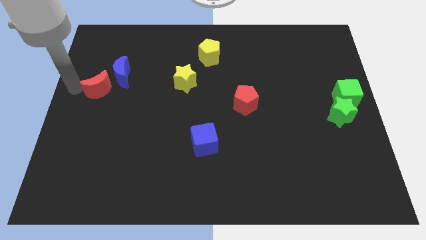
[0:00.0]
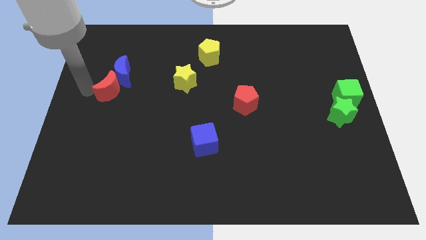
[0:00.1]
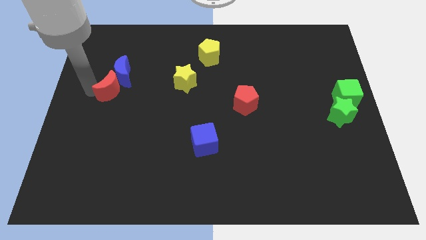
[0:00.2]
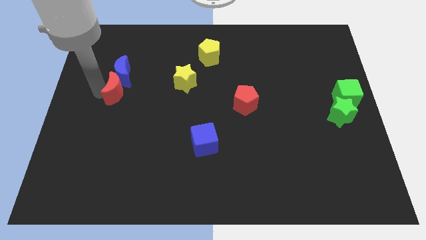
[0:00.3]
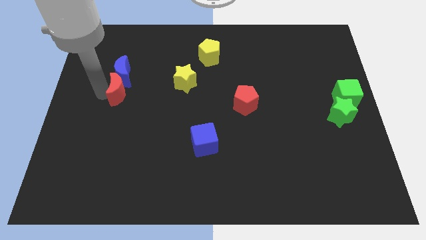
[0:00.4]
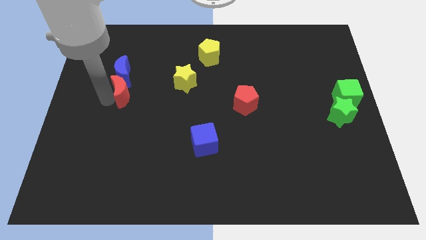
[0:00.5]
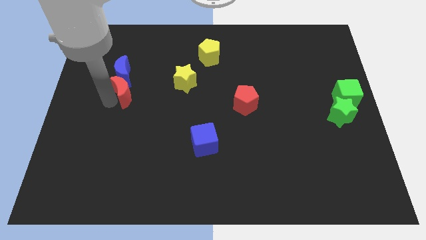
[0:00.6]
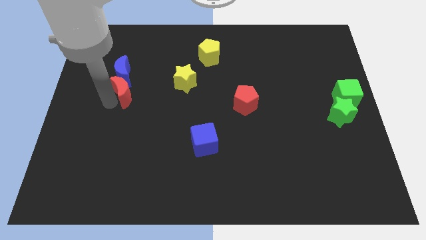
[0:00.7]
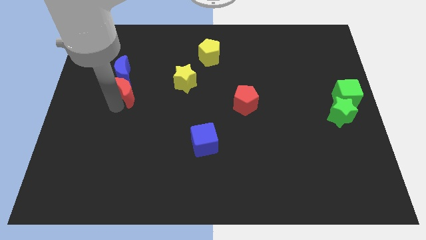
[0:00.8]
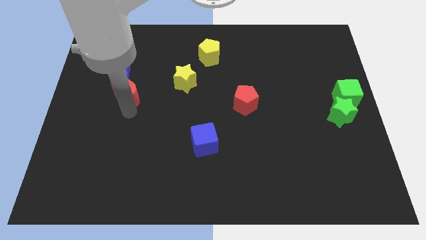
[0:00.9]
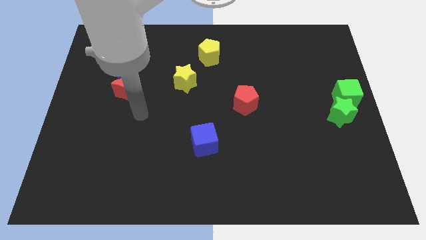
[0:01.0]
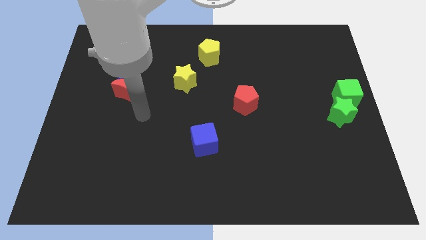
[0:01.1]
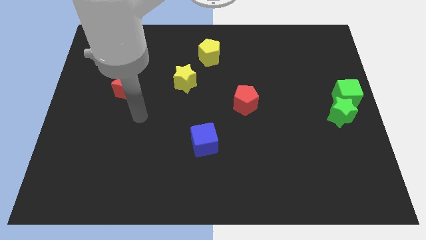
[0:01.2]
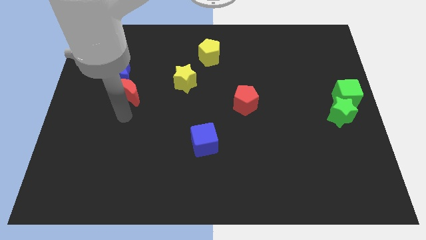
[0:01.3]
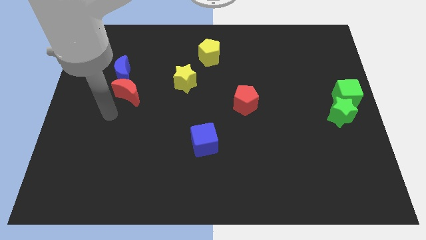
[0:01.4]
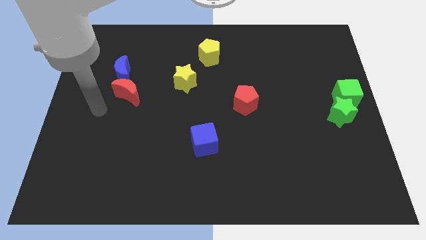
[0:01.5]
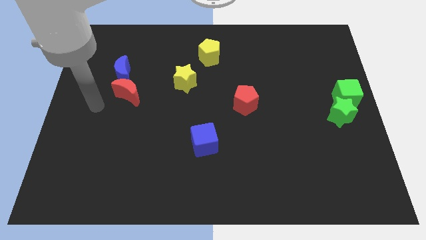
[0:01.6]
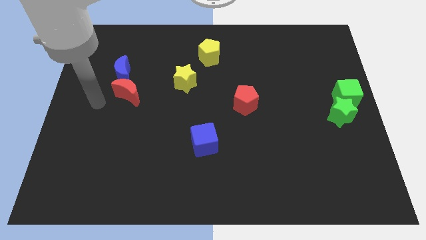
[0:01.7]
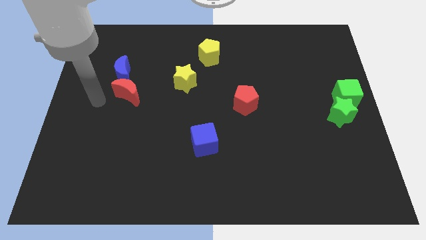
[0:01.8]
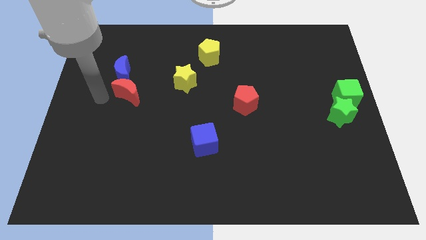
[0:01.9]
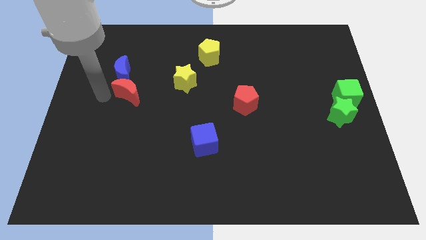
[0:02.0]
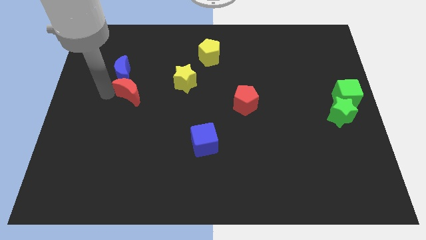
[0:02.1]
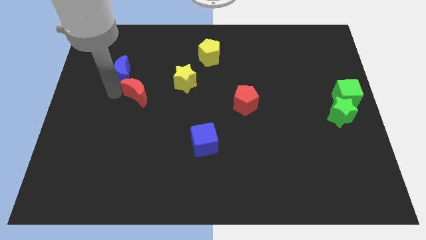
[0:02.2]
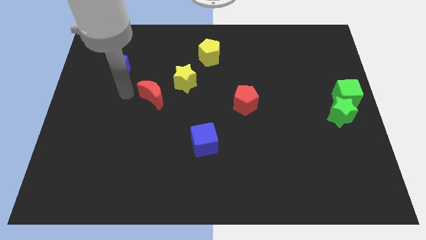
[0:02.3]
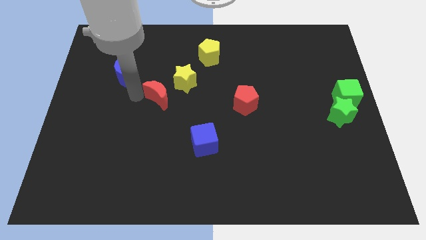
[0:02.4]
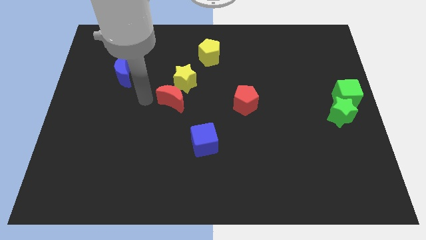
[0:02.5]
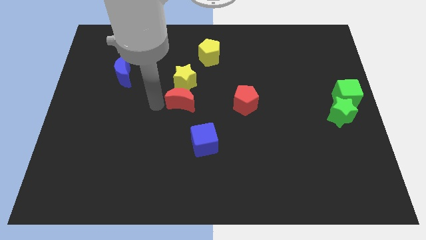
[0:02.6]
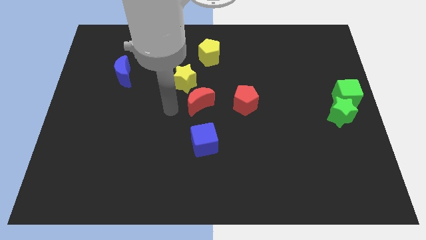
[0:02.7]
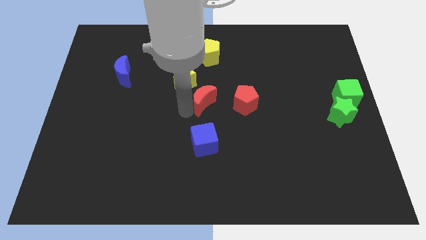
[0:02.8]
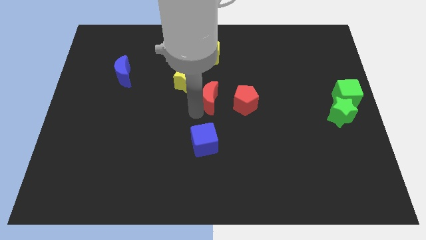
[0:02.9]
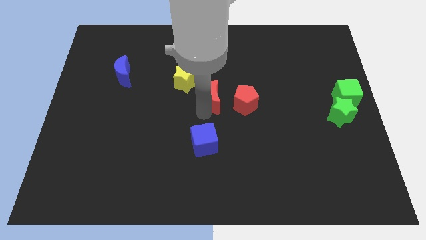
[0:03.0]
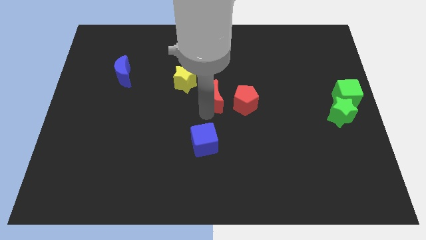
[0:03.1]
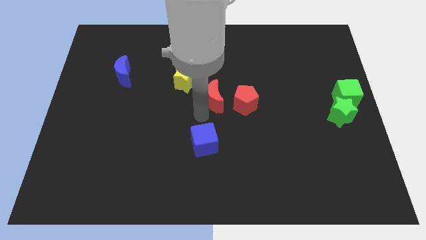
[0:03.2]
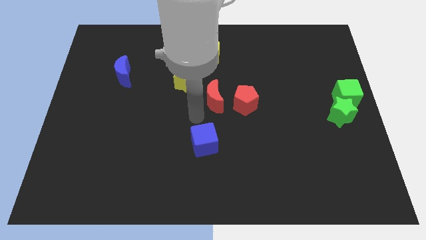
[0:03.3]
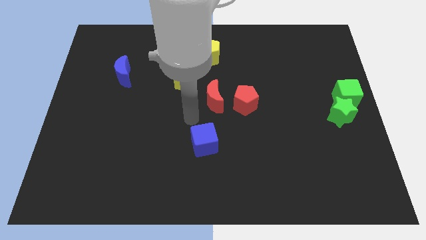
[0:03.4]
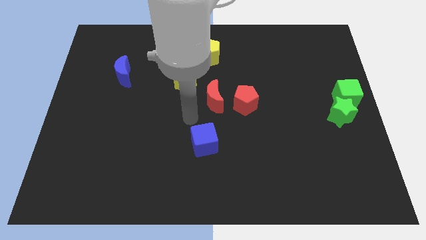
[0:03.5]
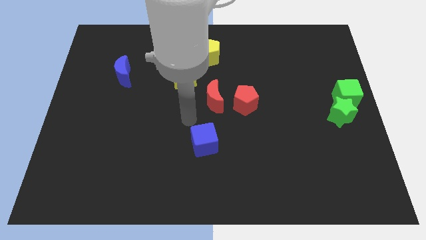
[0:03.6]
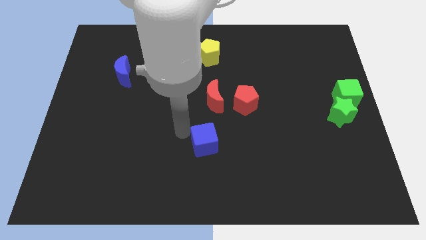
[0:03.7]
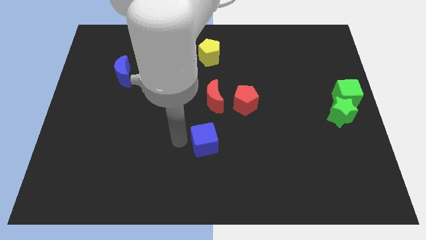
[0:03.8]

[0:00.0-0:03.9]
move the red crescent to the left of the red pentagon

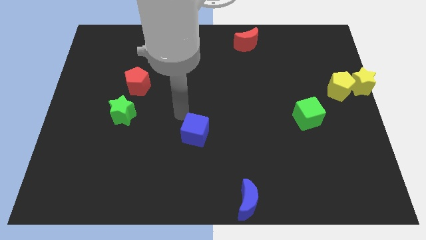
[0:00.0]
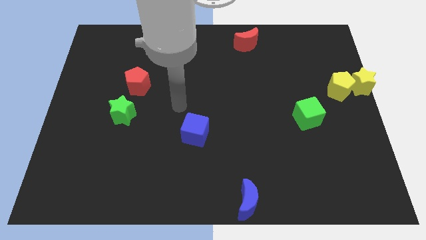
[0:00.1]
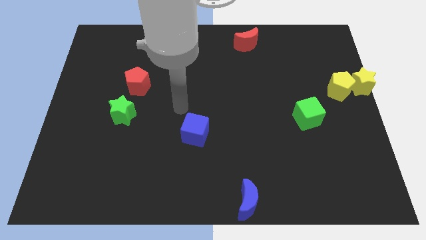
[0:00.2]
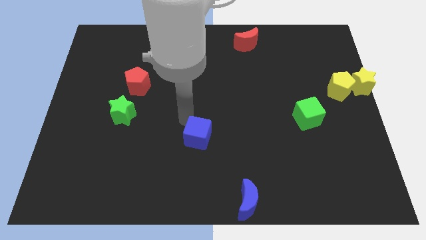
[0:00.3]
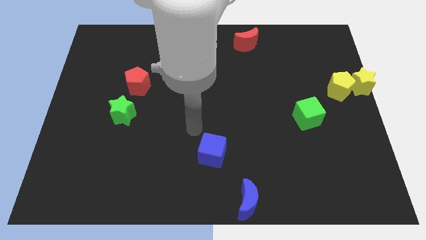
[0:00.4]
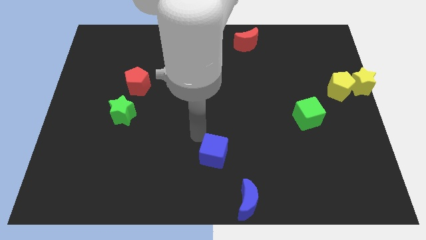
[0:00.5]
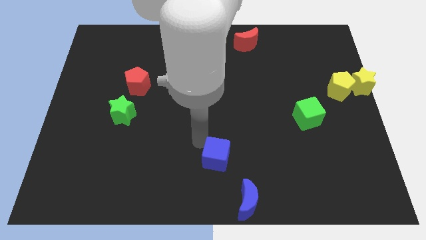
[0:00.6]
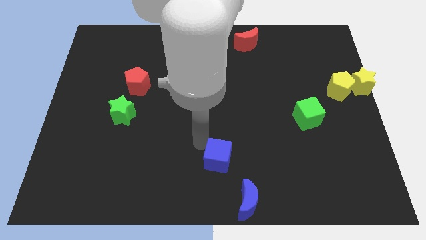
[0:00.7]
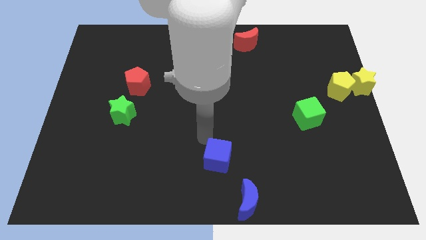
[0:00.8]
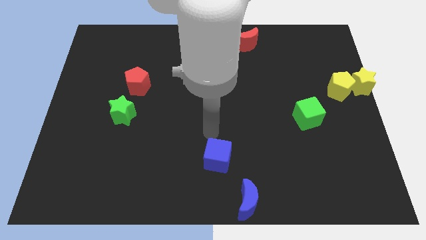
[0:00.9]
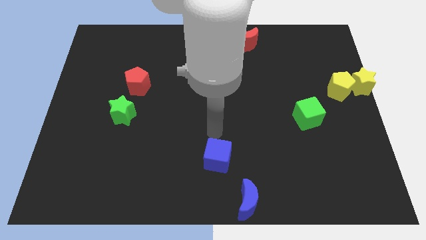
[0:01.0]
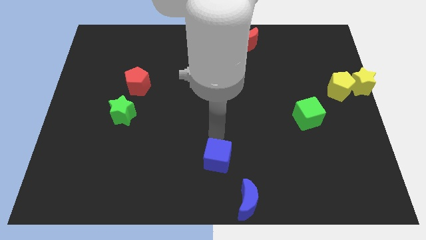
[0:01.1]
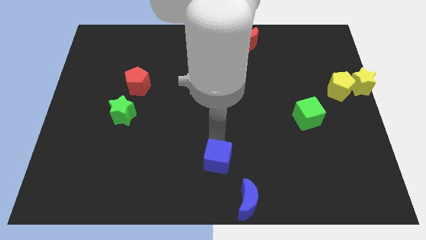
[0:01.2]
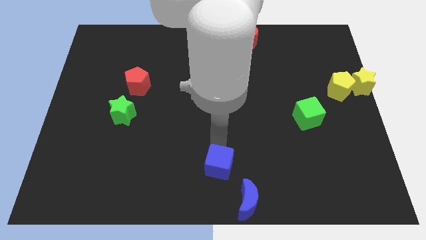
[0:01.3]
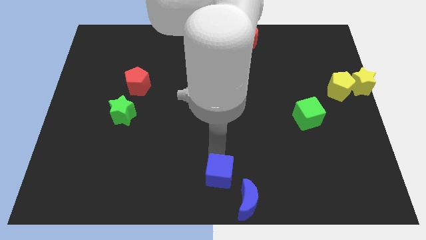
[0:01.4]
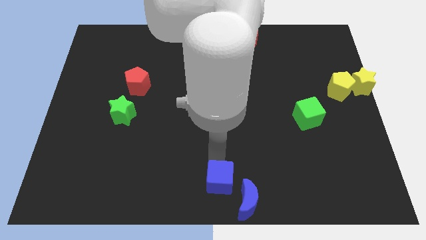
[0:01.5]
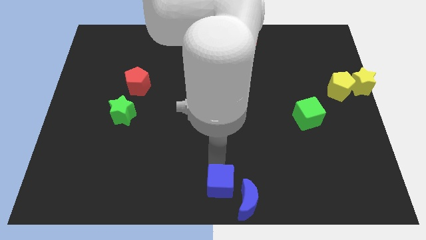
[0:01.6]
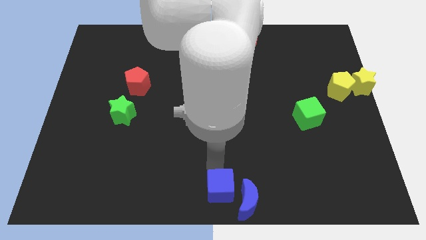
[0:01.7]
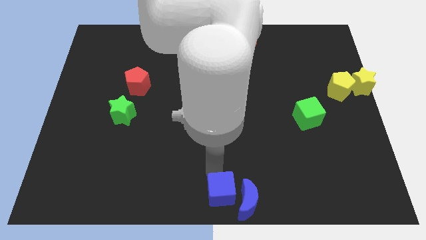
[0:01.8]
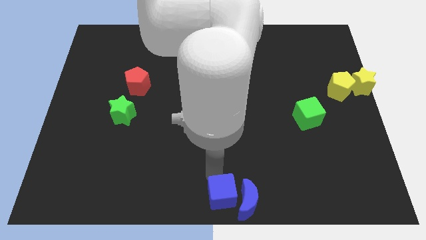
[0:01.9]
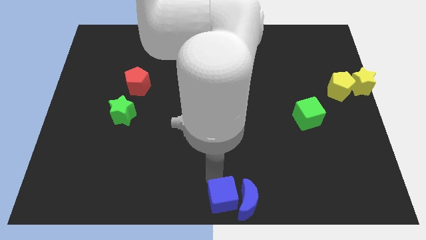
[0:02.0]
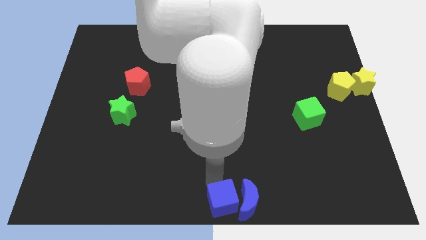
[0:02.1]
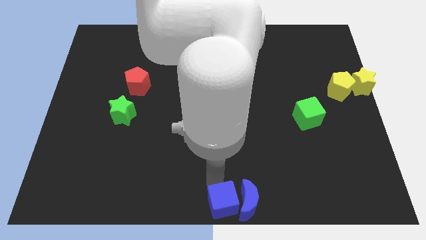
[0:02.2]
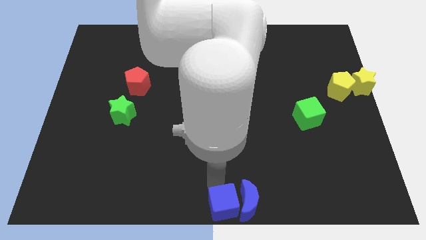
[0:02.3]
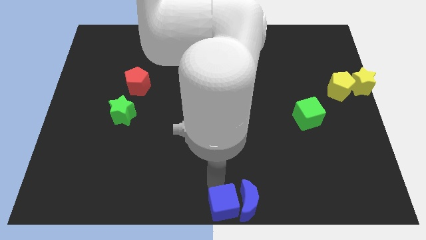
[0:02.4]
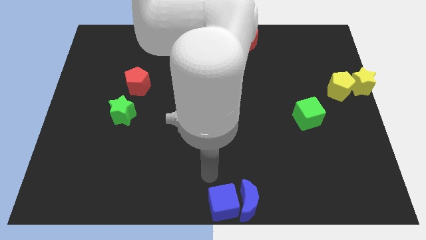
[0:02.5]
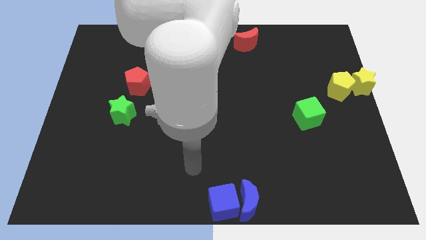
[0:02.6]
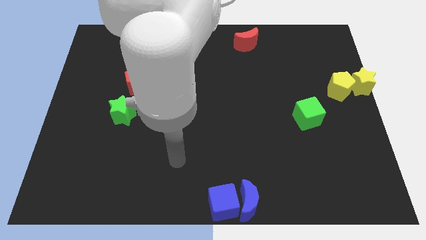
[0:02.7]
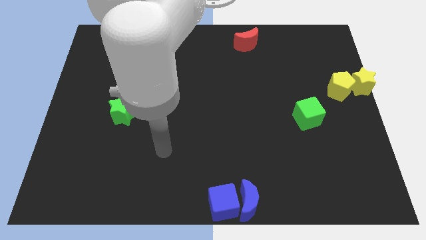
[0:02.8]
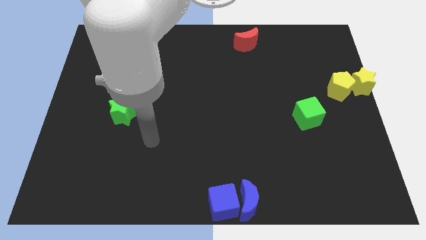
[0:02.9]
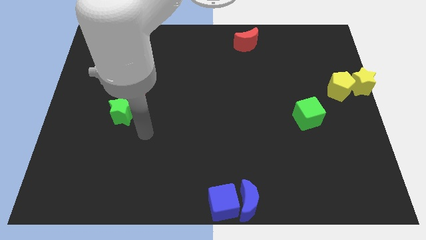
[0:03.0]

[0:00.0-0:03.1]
place the blue cube to the left of the blue crescent

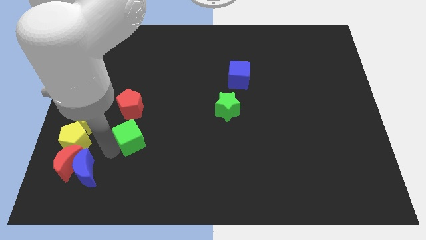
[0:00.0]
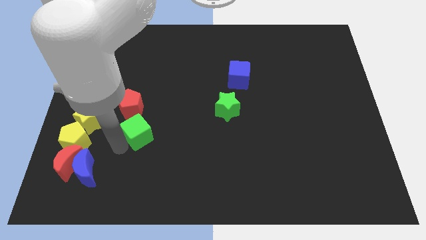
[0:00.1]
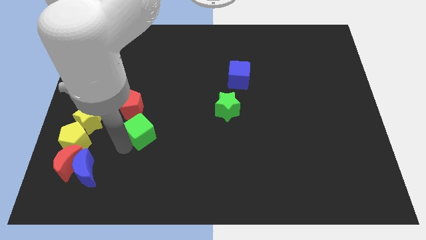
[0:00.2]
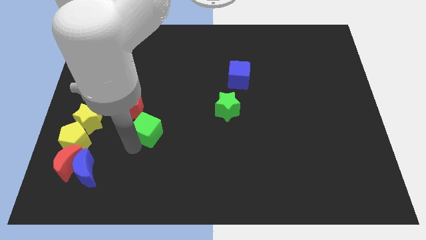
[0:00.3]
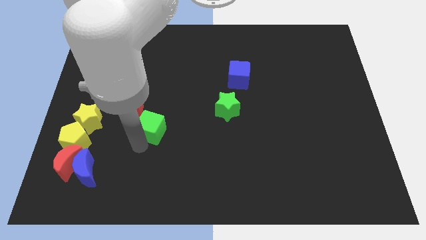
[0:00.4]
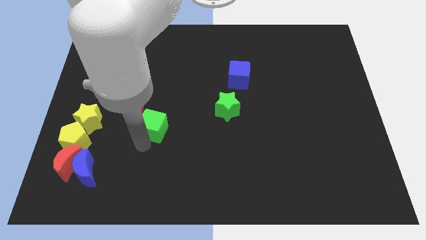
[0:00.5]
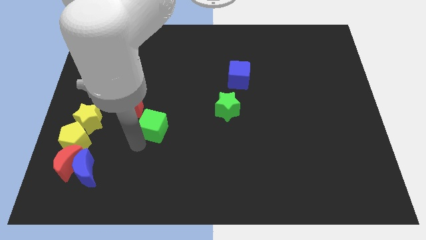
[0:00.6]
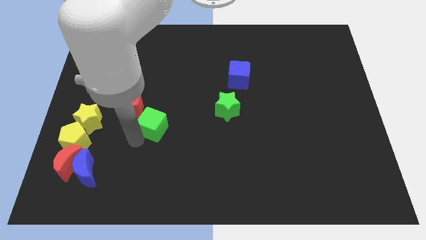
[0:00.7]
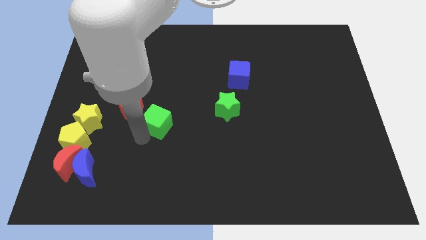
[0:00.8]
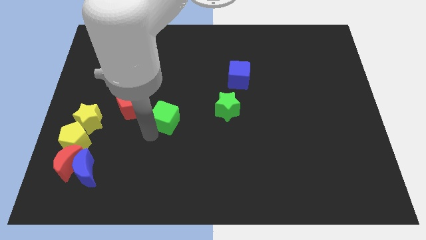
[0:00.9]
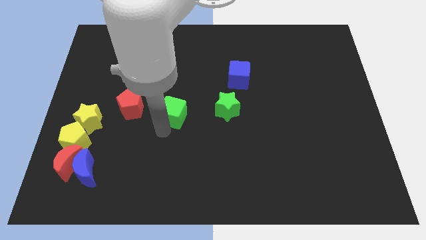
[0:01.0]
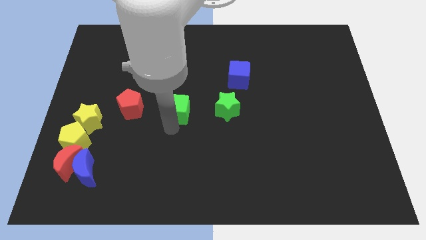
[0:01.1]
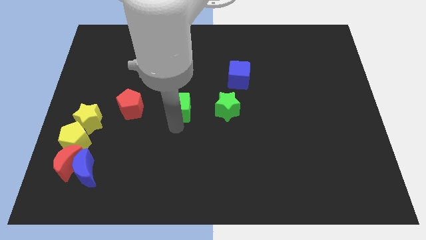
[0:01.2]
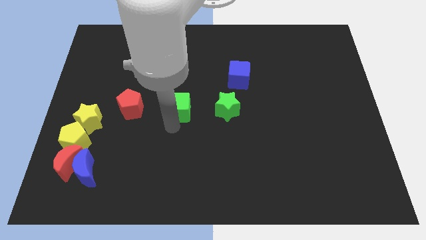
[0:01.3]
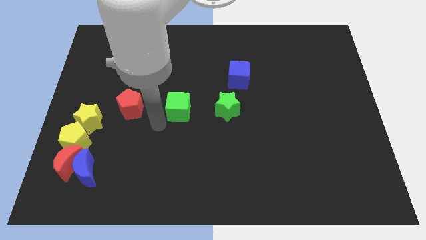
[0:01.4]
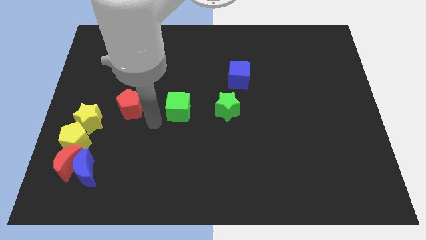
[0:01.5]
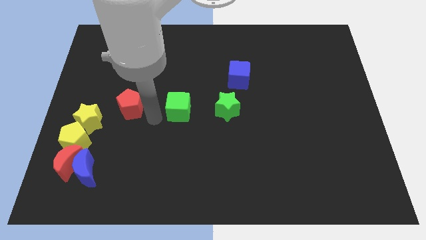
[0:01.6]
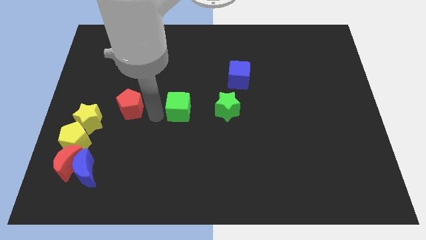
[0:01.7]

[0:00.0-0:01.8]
place the green cube in between the red pentagon and green star to form a horizontal line

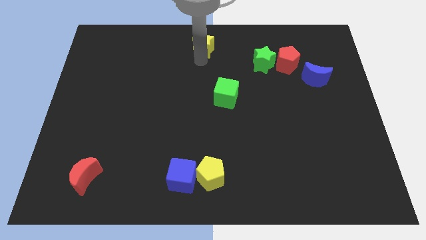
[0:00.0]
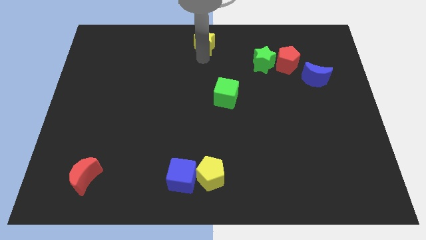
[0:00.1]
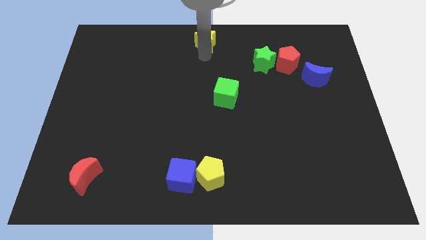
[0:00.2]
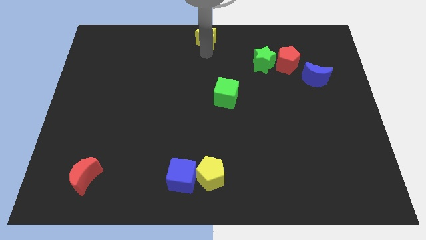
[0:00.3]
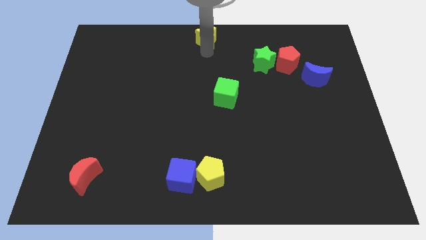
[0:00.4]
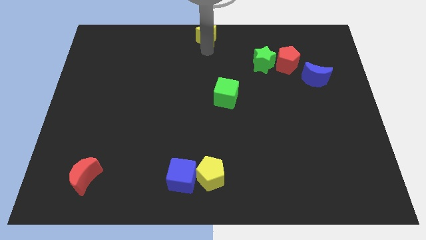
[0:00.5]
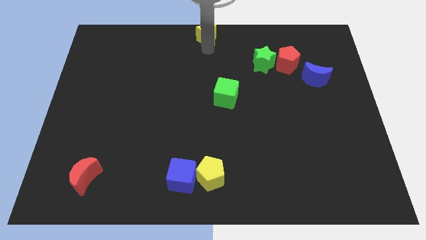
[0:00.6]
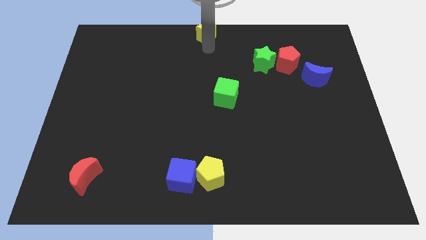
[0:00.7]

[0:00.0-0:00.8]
push the yellow star to the top center of the board
